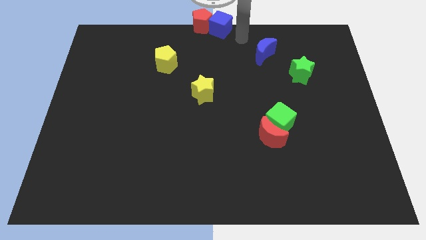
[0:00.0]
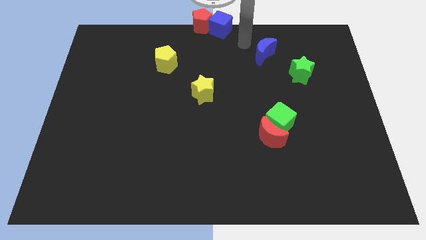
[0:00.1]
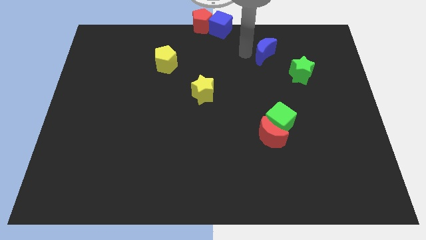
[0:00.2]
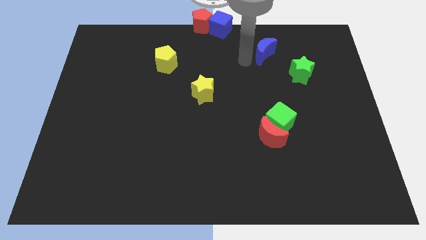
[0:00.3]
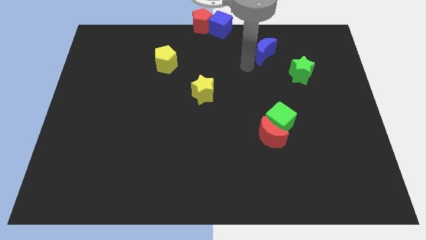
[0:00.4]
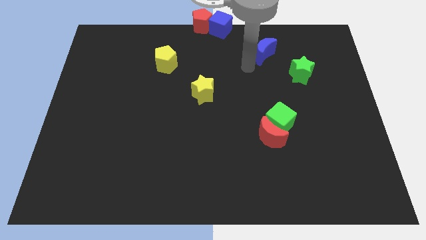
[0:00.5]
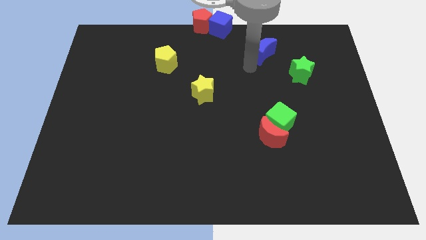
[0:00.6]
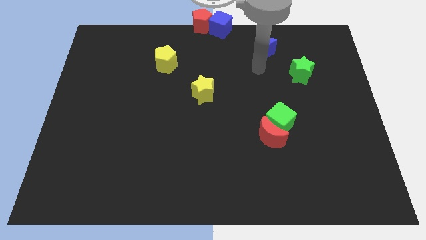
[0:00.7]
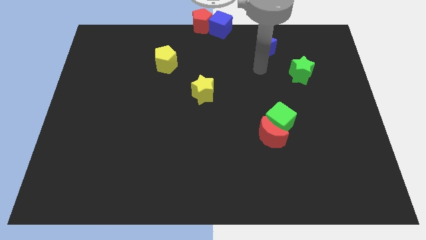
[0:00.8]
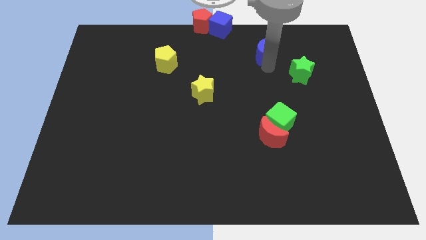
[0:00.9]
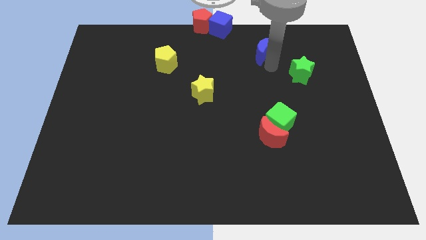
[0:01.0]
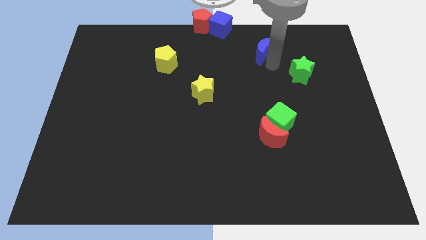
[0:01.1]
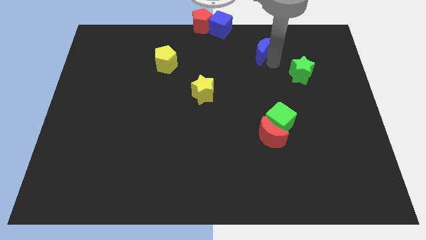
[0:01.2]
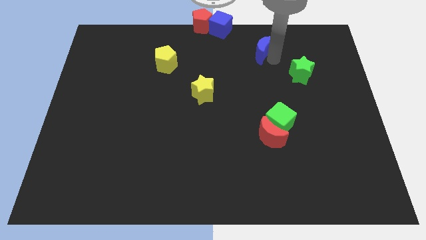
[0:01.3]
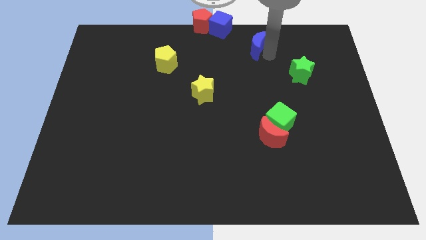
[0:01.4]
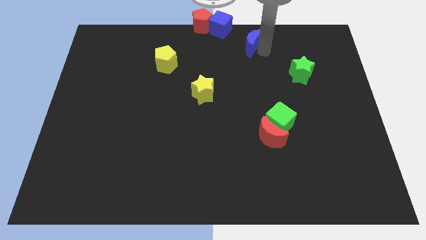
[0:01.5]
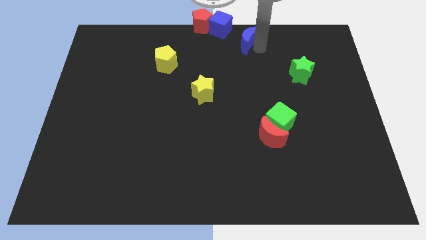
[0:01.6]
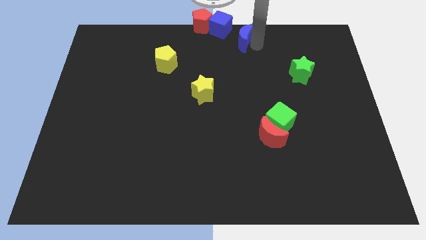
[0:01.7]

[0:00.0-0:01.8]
push the blue crescent to the right of the blue cube

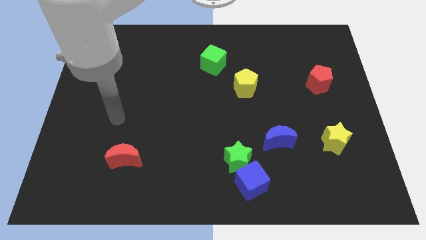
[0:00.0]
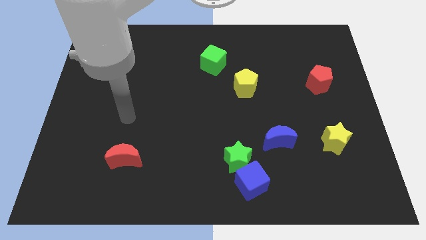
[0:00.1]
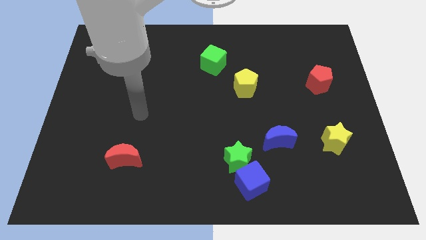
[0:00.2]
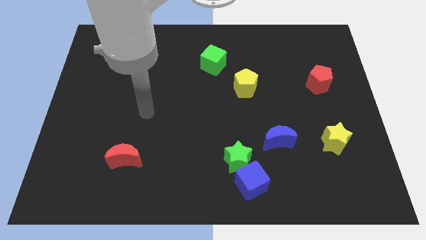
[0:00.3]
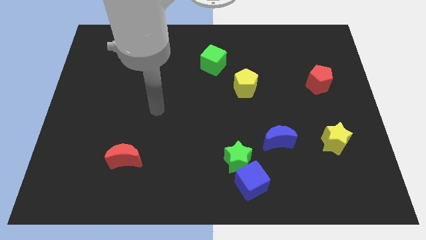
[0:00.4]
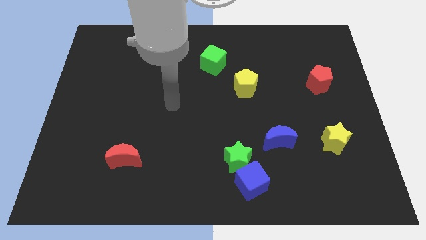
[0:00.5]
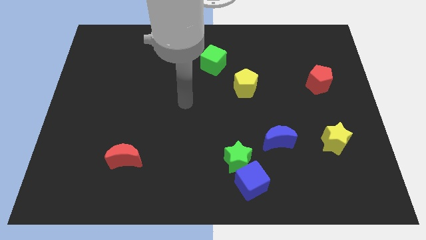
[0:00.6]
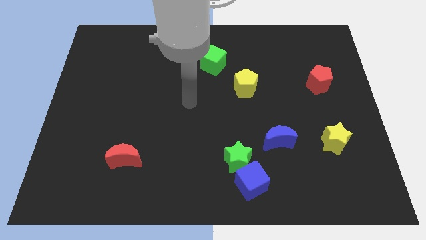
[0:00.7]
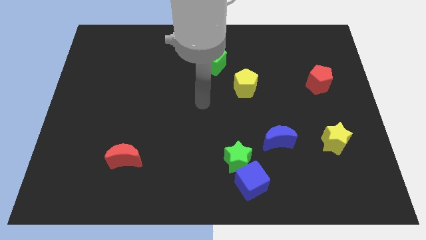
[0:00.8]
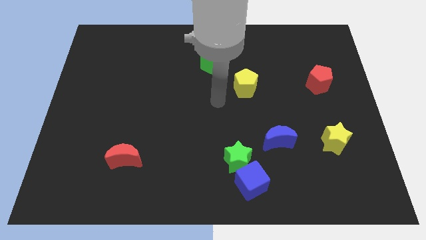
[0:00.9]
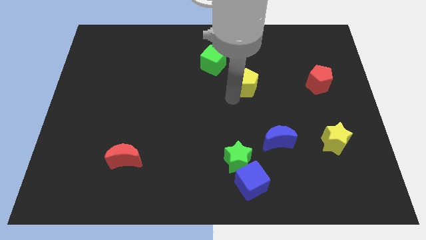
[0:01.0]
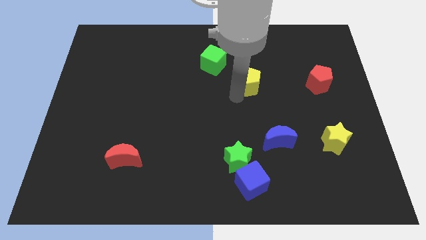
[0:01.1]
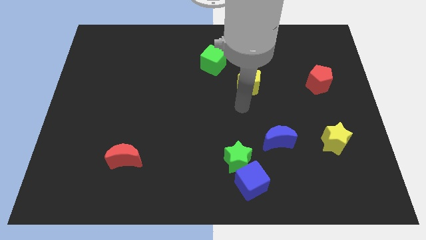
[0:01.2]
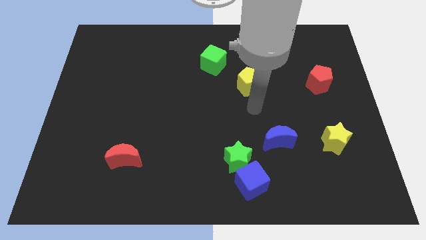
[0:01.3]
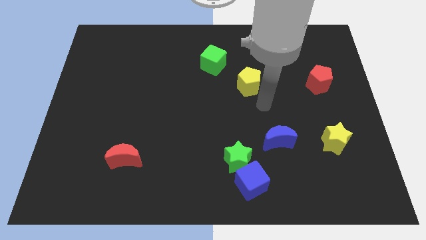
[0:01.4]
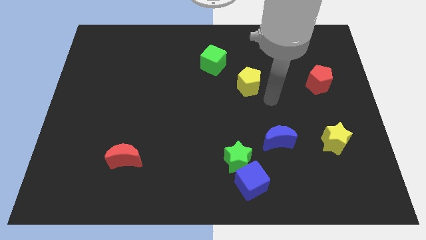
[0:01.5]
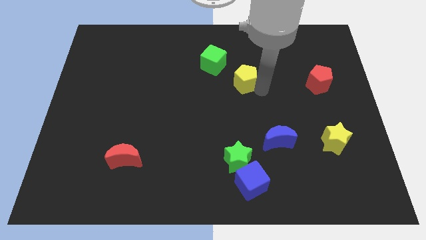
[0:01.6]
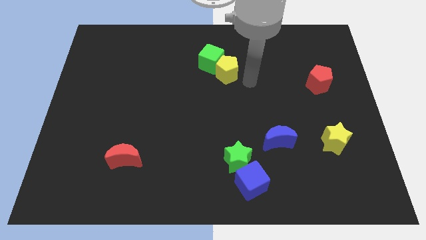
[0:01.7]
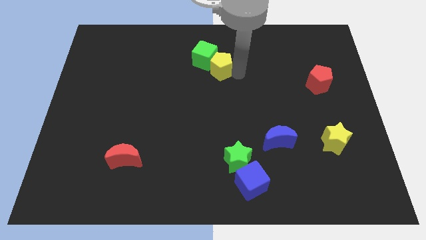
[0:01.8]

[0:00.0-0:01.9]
push the yellow pentagon into green cube diagonally

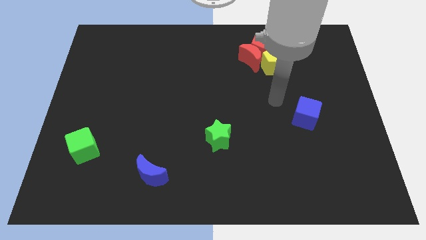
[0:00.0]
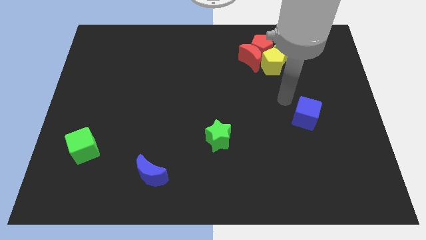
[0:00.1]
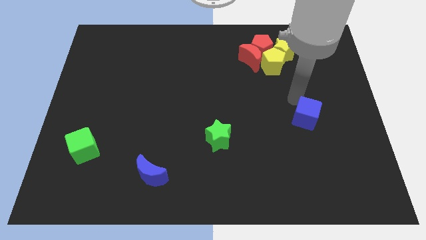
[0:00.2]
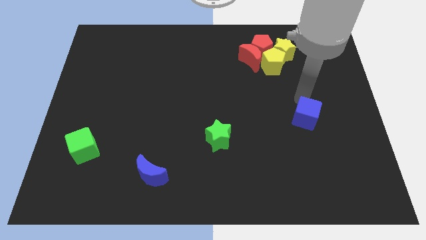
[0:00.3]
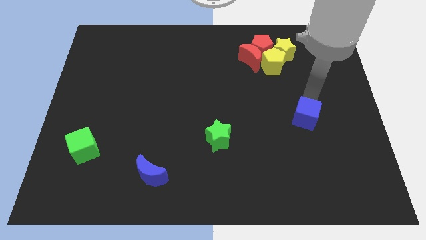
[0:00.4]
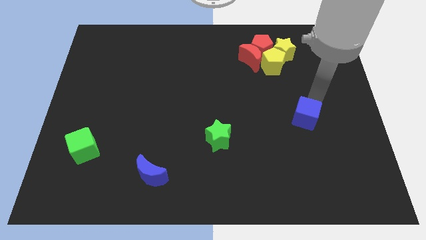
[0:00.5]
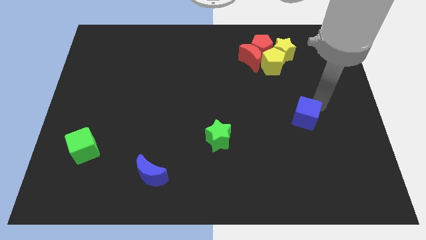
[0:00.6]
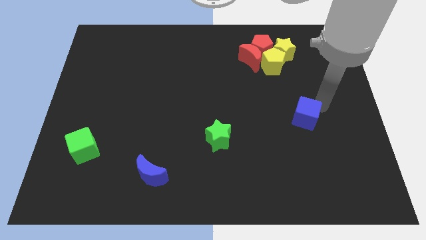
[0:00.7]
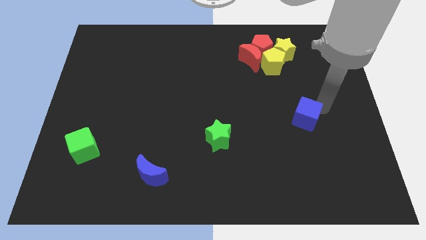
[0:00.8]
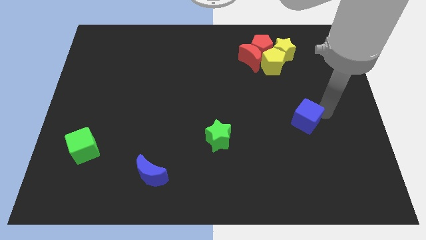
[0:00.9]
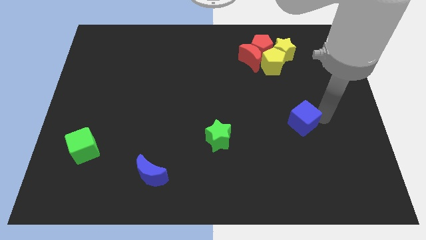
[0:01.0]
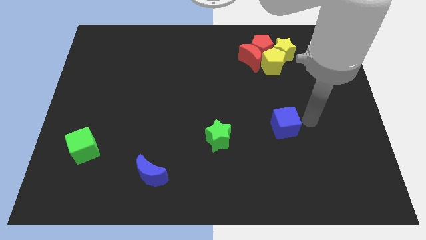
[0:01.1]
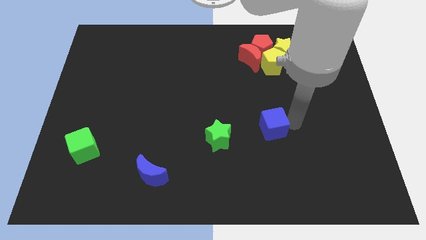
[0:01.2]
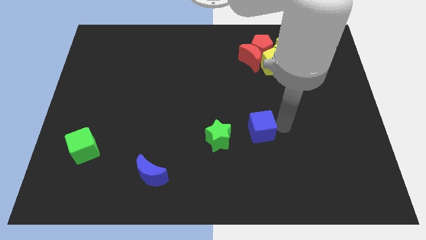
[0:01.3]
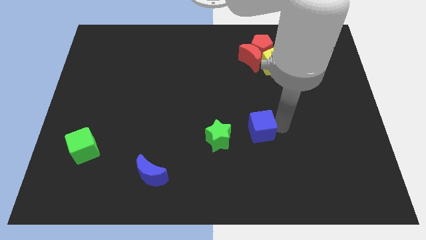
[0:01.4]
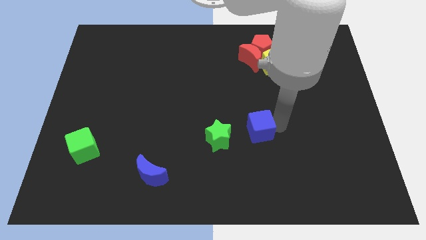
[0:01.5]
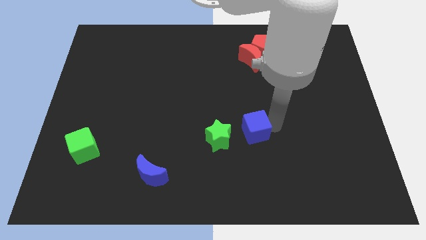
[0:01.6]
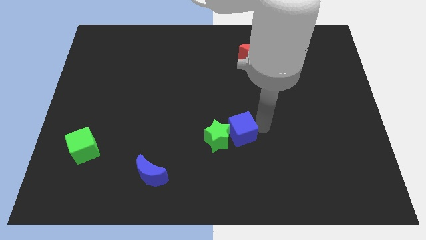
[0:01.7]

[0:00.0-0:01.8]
move the blue cube into the green star

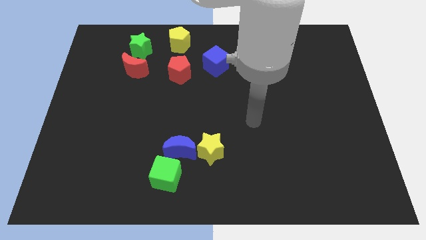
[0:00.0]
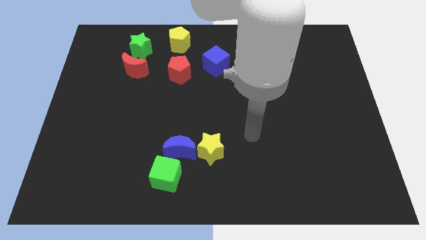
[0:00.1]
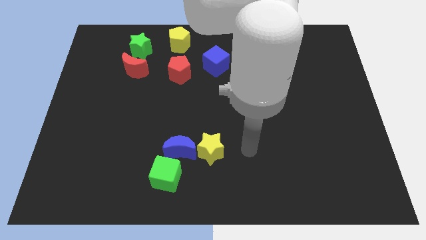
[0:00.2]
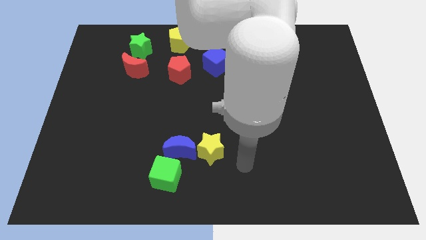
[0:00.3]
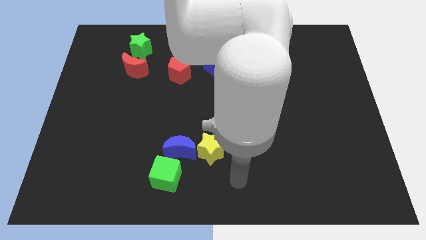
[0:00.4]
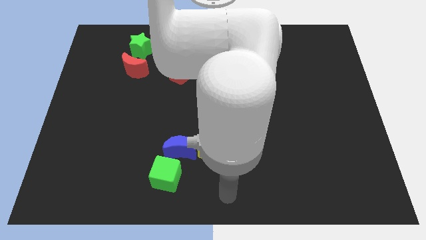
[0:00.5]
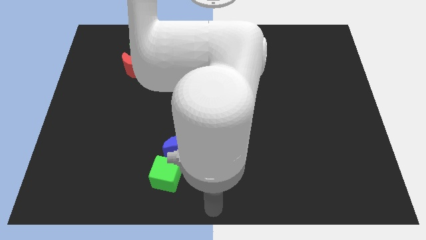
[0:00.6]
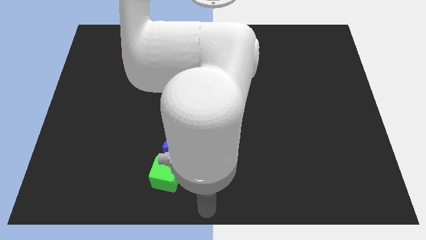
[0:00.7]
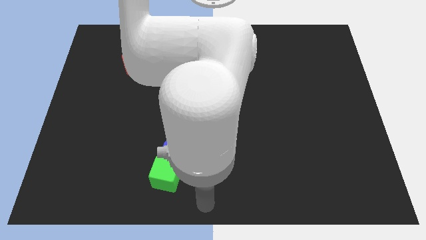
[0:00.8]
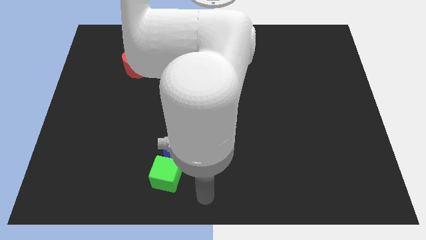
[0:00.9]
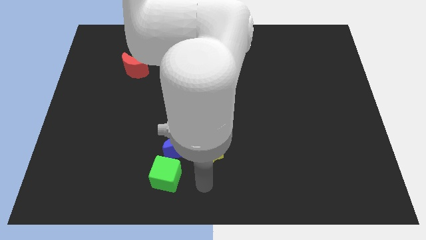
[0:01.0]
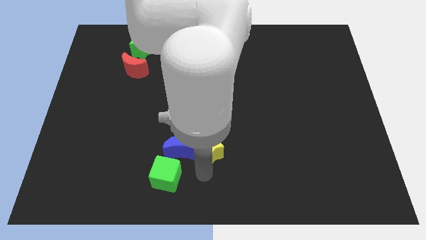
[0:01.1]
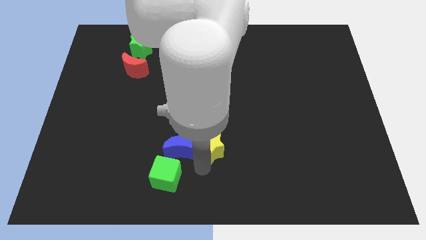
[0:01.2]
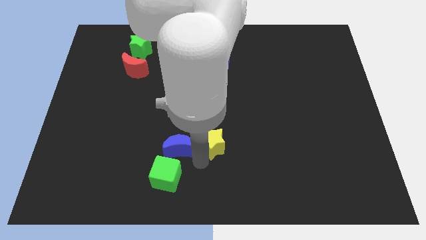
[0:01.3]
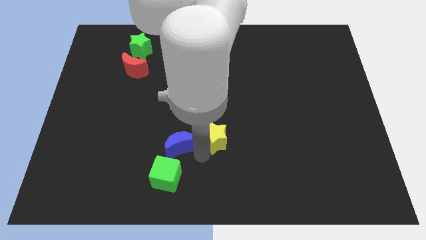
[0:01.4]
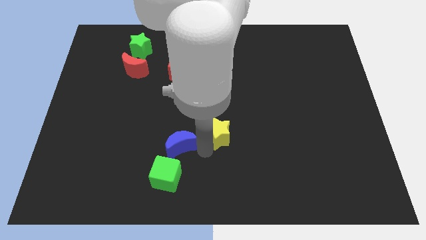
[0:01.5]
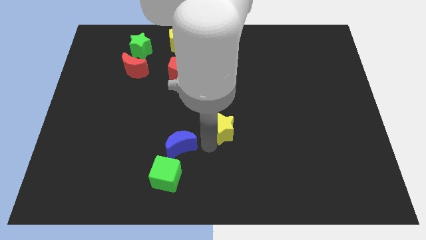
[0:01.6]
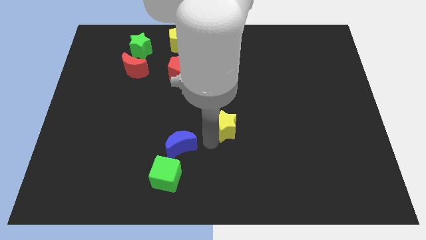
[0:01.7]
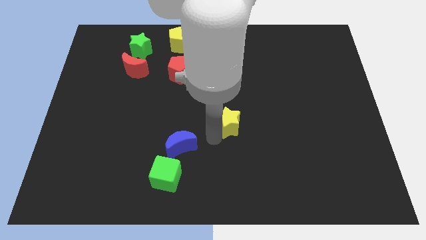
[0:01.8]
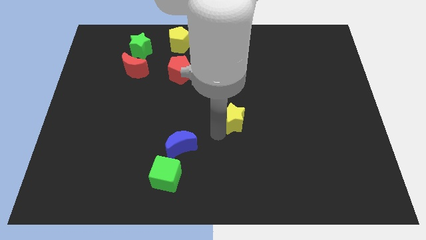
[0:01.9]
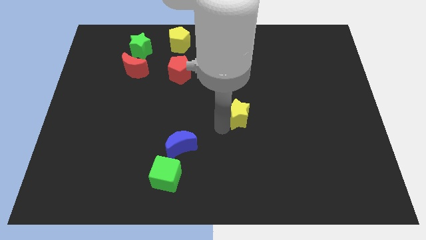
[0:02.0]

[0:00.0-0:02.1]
separate the yellow star and blue moon

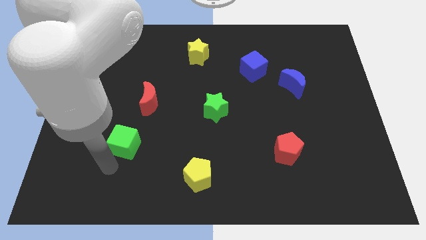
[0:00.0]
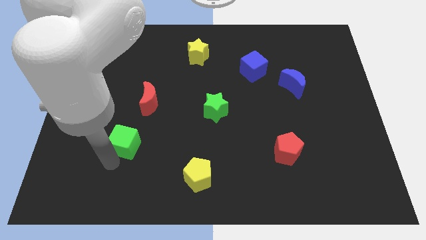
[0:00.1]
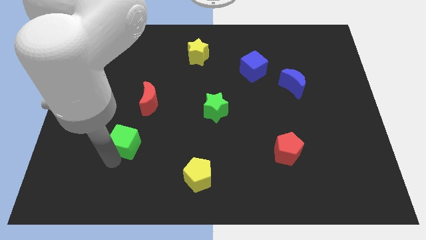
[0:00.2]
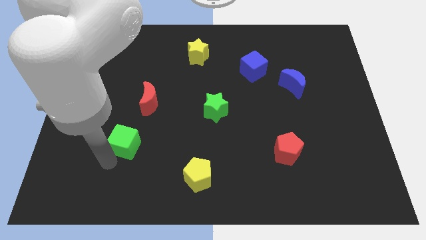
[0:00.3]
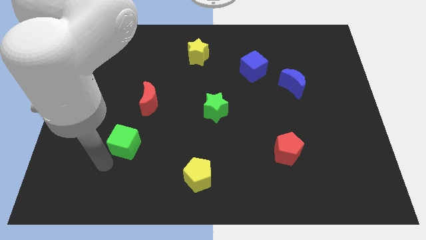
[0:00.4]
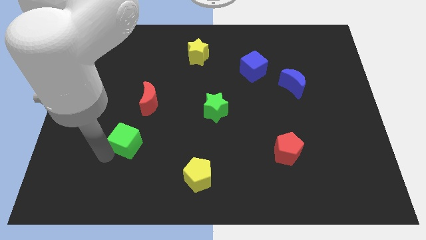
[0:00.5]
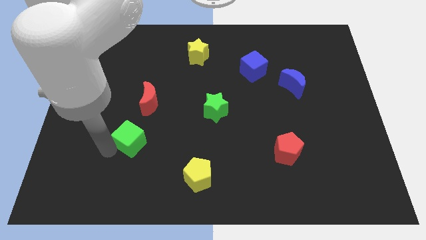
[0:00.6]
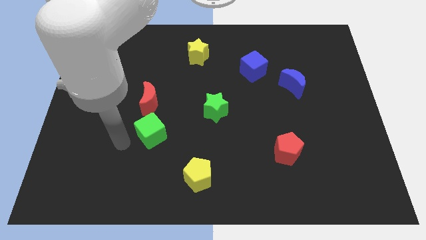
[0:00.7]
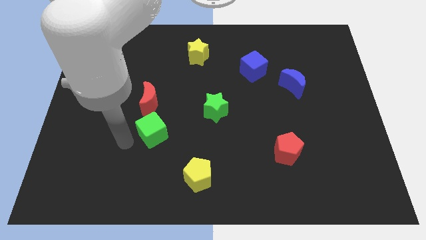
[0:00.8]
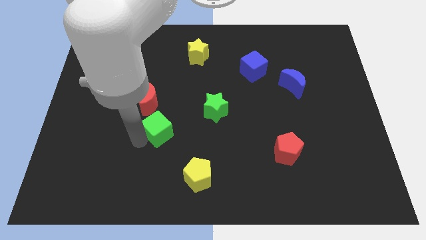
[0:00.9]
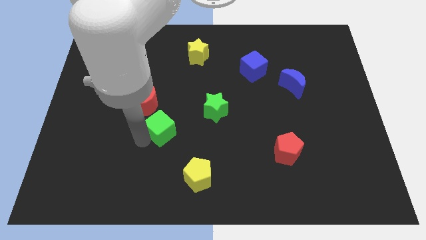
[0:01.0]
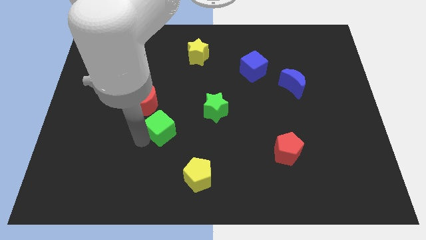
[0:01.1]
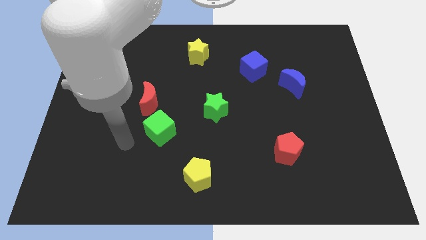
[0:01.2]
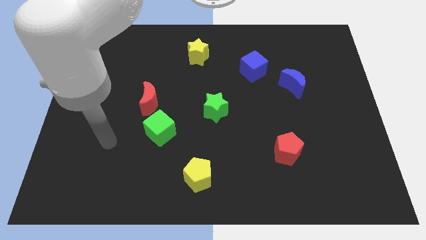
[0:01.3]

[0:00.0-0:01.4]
place the green cube in between the red moon and yellow pentagon
